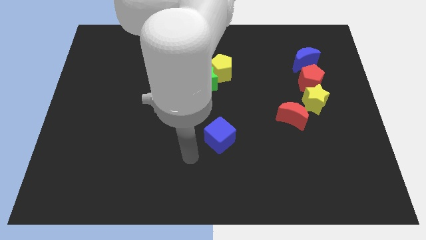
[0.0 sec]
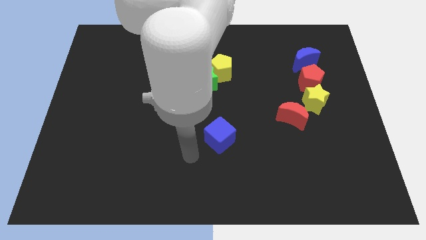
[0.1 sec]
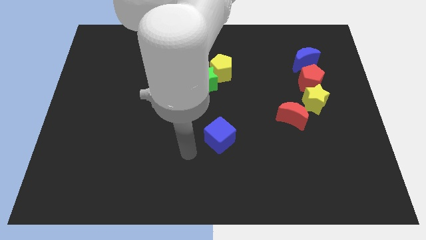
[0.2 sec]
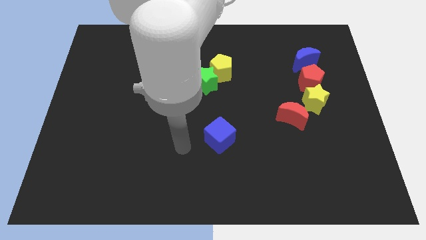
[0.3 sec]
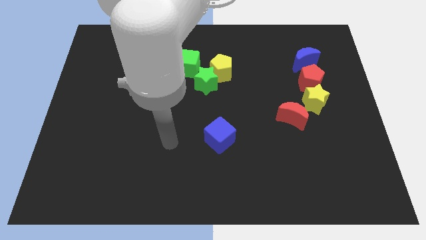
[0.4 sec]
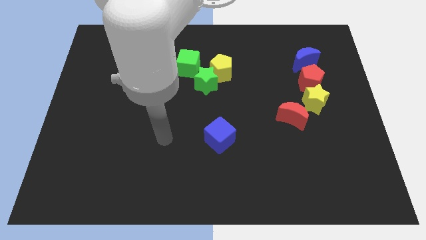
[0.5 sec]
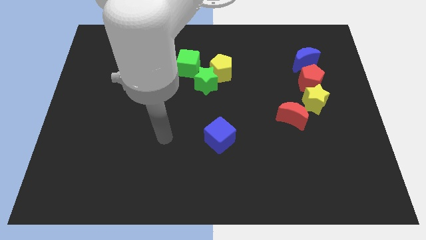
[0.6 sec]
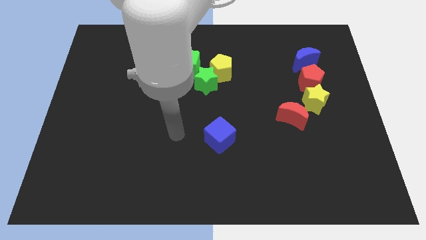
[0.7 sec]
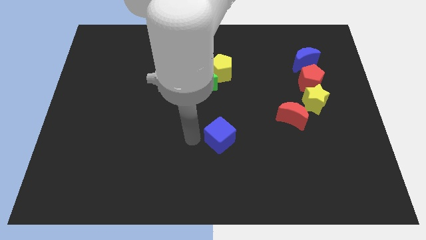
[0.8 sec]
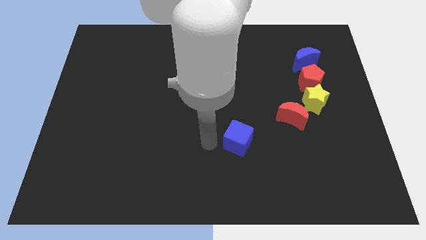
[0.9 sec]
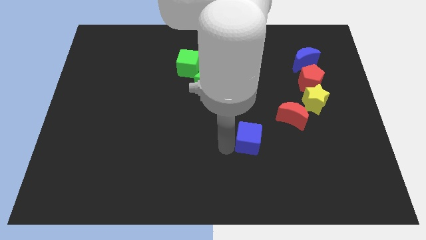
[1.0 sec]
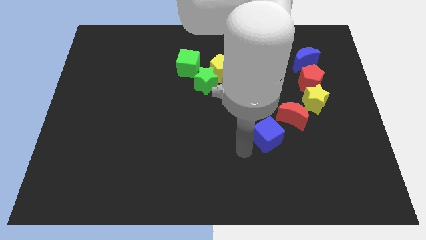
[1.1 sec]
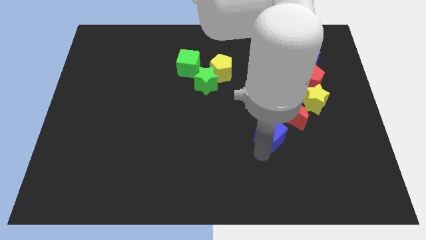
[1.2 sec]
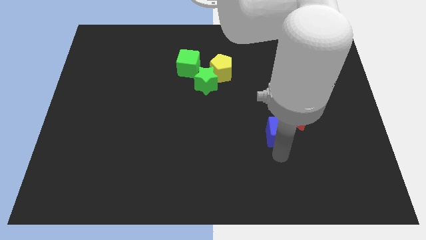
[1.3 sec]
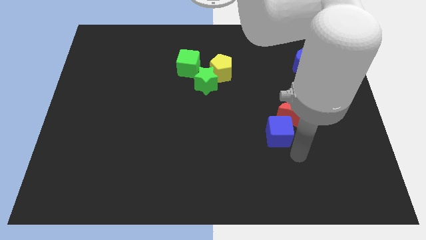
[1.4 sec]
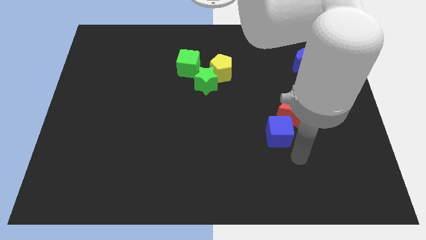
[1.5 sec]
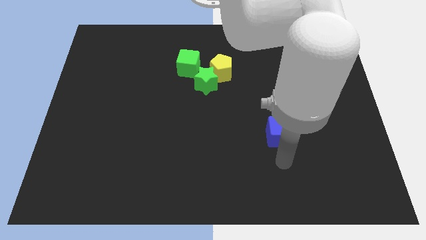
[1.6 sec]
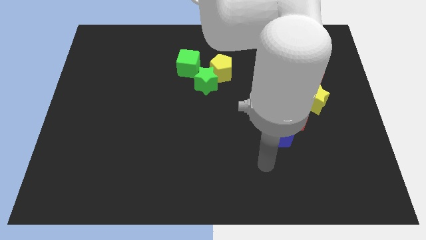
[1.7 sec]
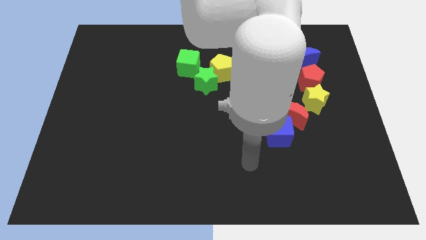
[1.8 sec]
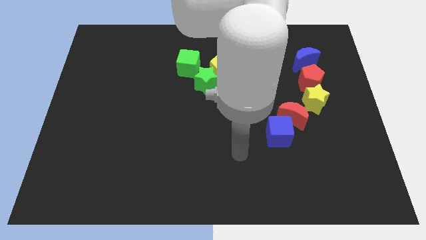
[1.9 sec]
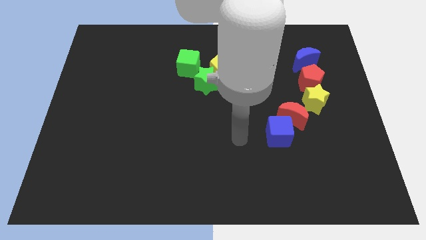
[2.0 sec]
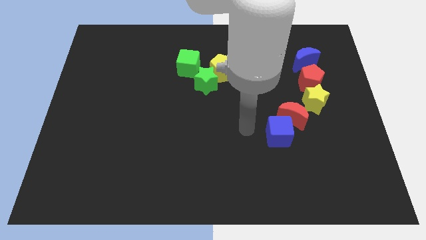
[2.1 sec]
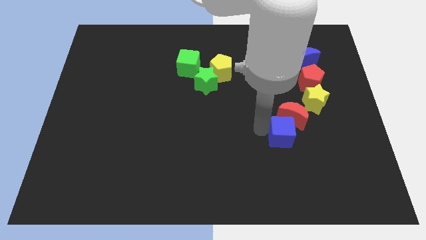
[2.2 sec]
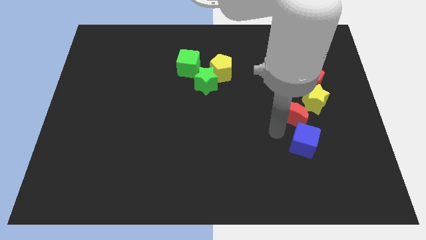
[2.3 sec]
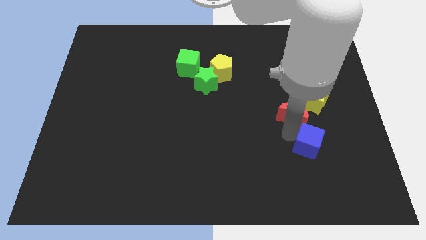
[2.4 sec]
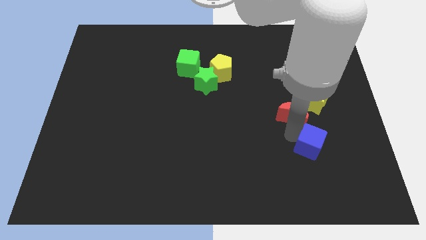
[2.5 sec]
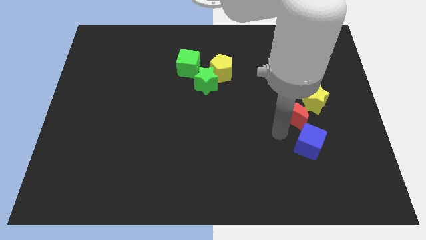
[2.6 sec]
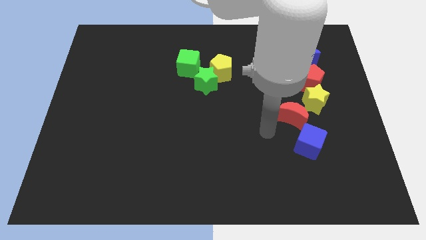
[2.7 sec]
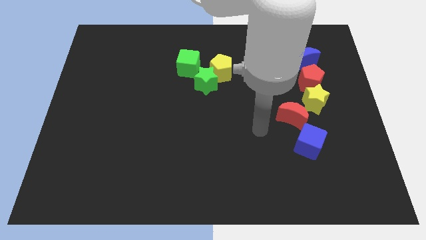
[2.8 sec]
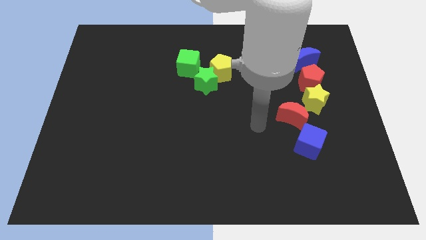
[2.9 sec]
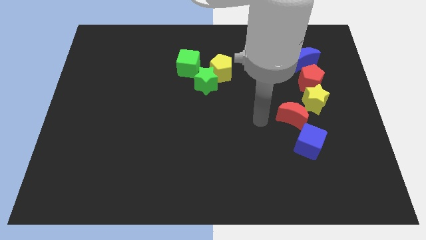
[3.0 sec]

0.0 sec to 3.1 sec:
move the blue cube to the right

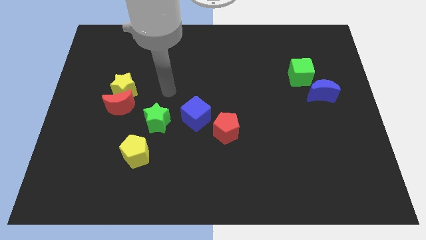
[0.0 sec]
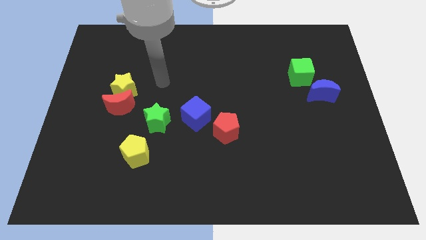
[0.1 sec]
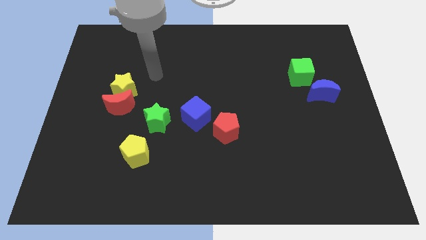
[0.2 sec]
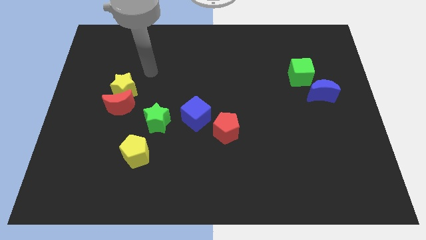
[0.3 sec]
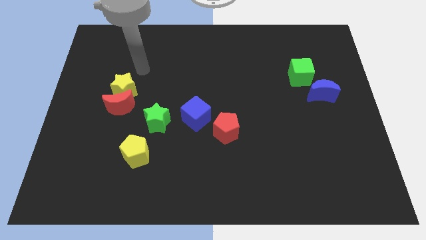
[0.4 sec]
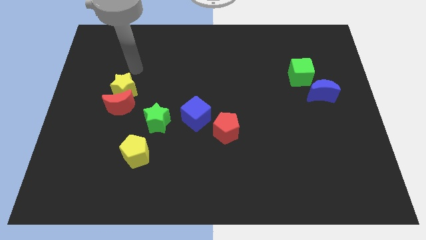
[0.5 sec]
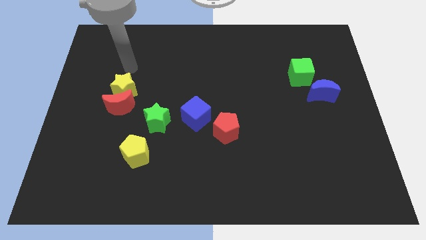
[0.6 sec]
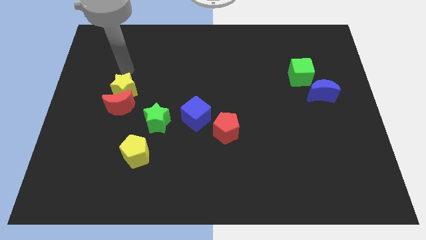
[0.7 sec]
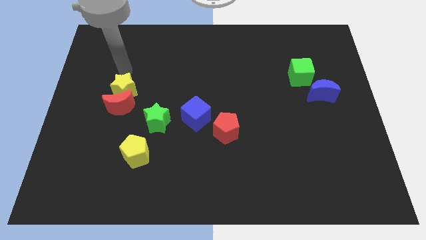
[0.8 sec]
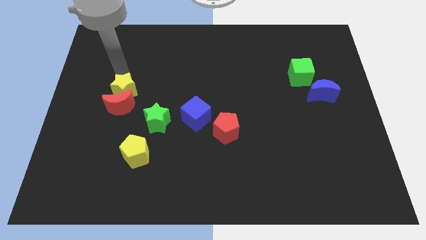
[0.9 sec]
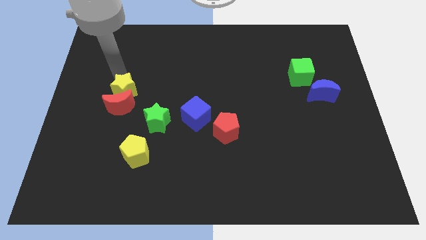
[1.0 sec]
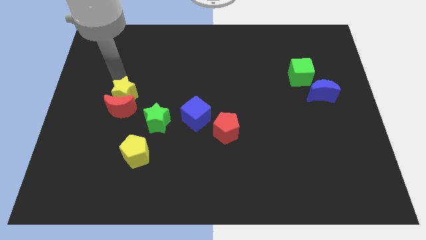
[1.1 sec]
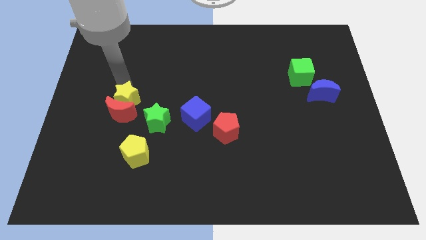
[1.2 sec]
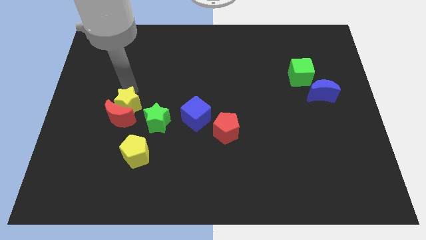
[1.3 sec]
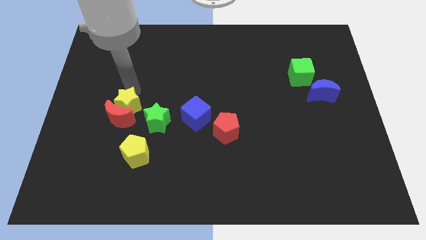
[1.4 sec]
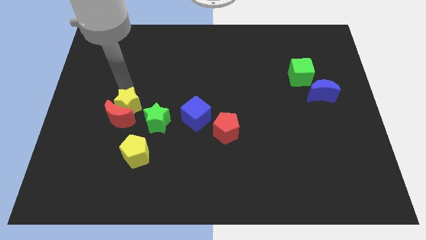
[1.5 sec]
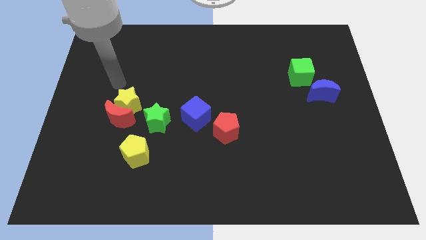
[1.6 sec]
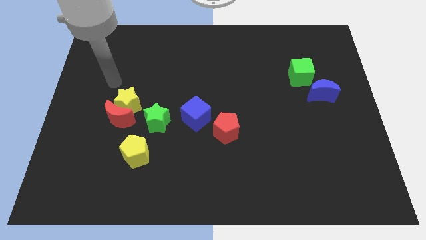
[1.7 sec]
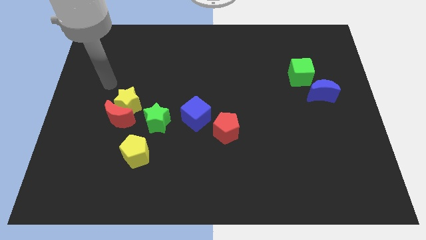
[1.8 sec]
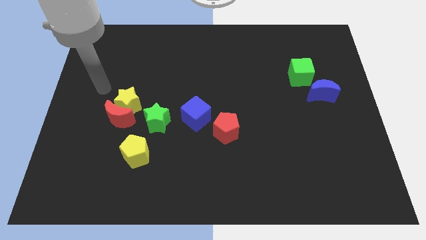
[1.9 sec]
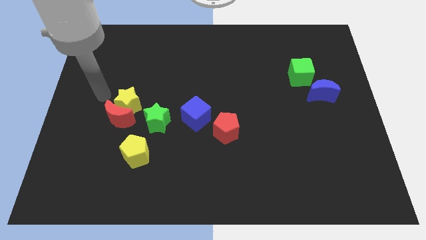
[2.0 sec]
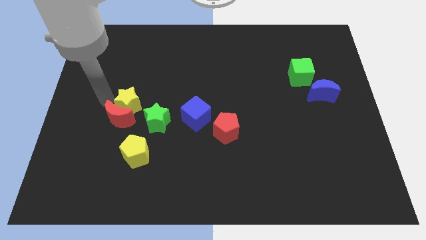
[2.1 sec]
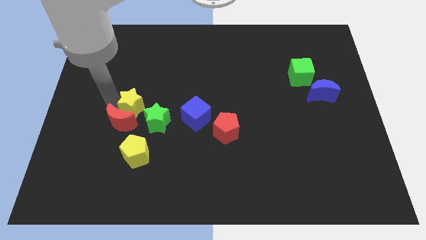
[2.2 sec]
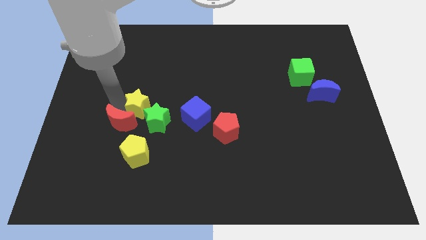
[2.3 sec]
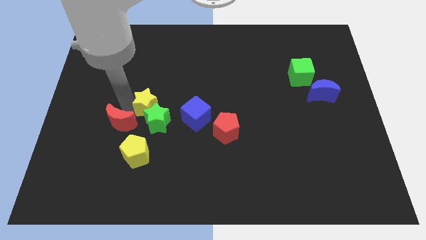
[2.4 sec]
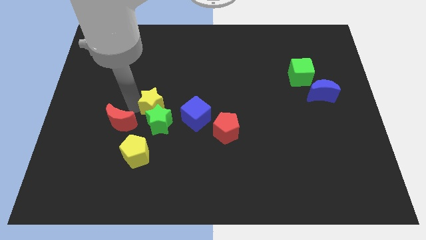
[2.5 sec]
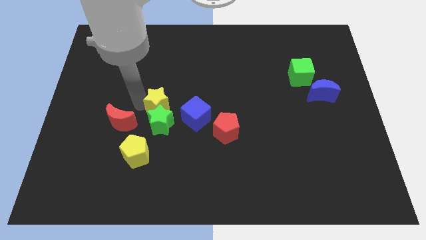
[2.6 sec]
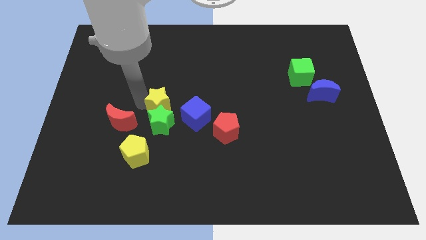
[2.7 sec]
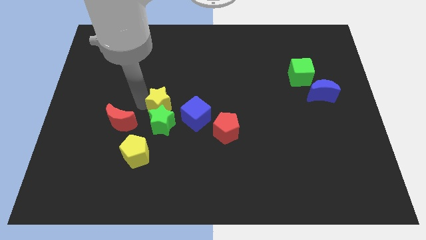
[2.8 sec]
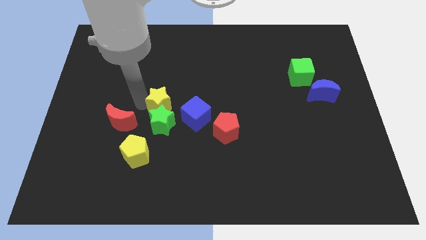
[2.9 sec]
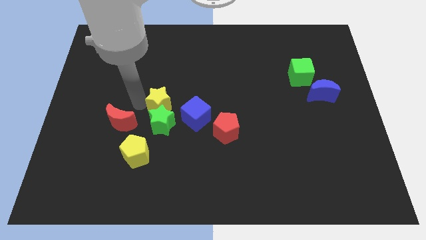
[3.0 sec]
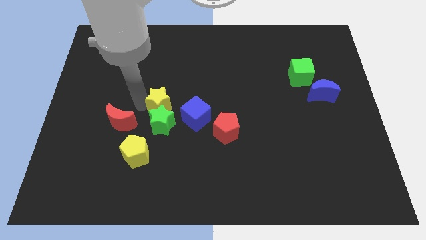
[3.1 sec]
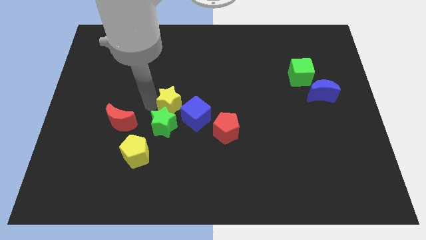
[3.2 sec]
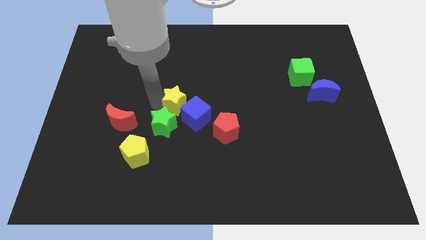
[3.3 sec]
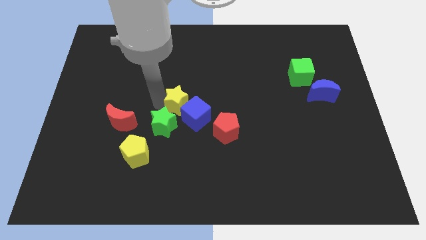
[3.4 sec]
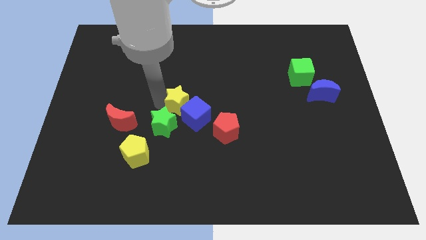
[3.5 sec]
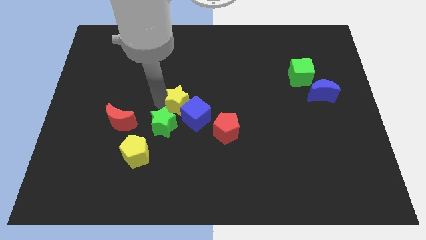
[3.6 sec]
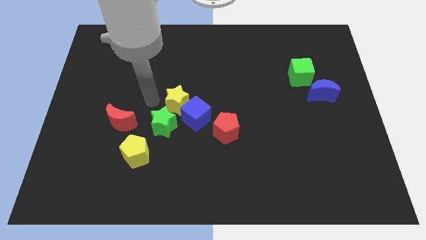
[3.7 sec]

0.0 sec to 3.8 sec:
push the yellow star to the top left of the blue cube

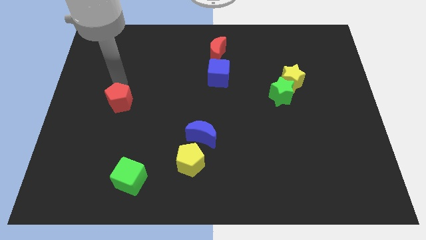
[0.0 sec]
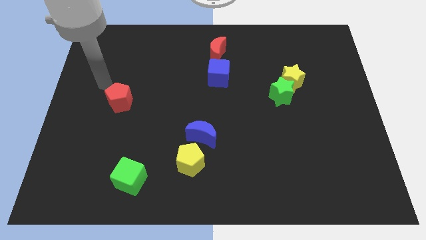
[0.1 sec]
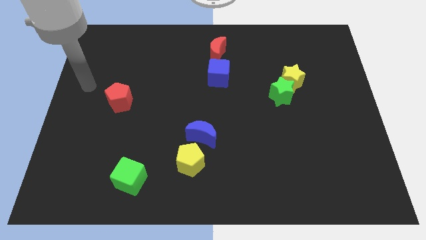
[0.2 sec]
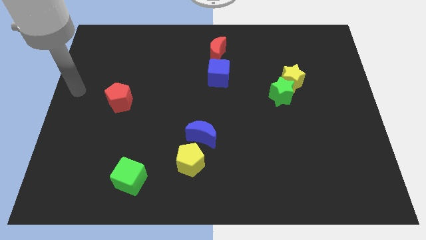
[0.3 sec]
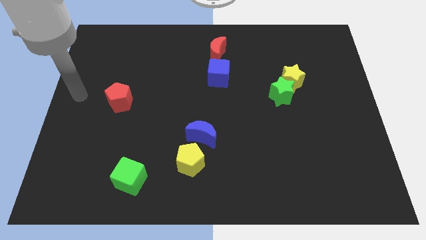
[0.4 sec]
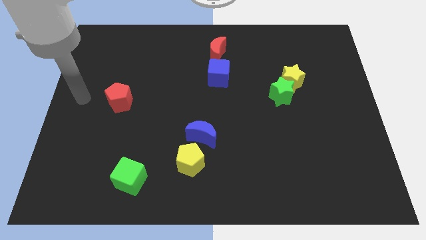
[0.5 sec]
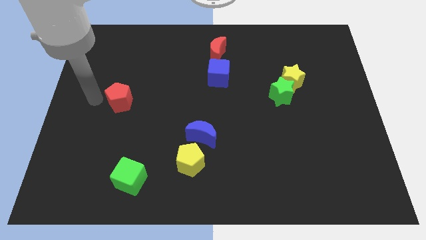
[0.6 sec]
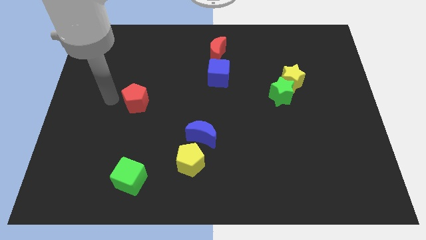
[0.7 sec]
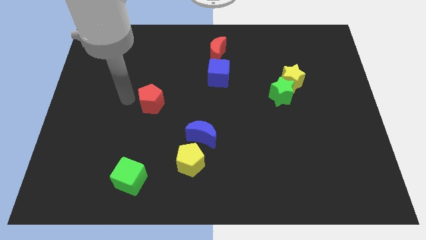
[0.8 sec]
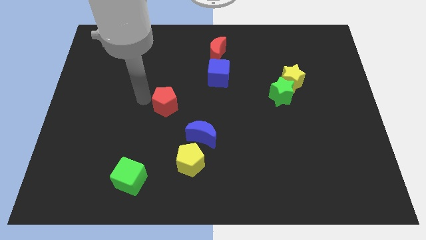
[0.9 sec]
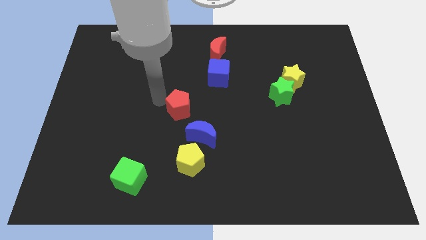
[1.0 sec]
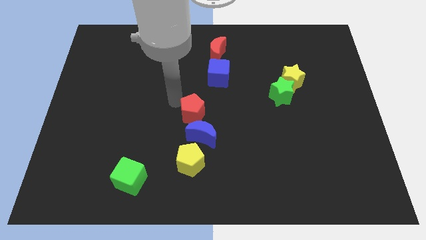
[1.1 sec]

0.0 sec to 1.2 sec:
place the red pentagon diagonally top left to blue moon

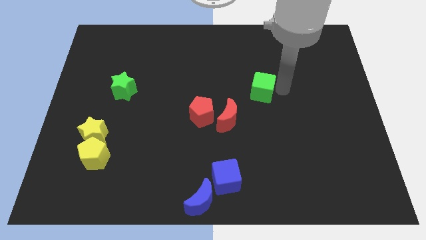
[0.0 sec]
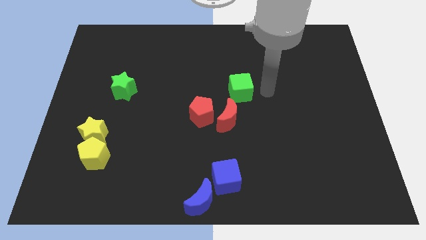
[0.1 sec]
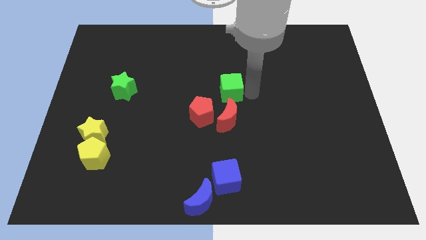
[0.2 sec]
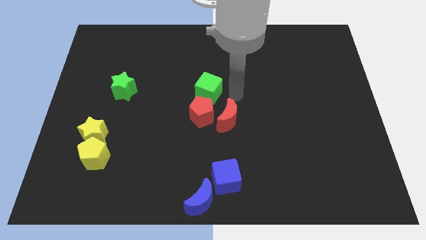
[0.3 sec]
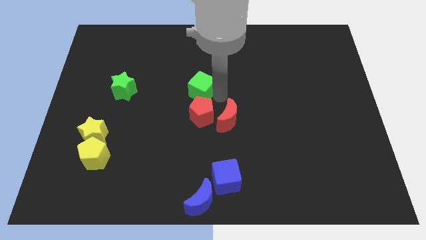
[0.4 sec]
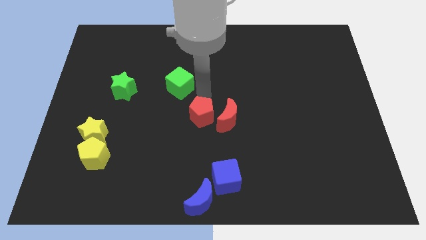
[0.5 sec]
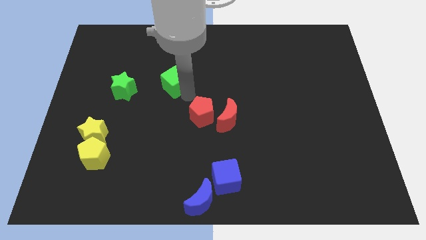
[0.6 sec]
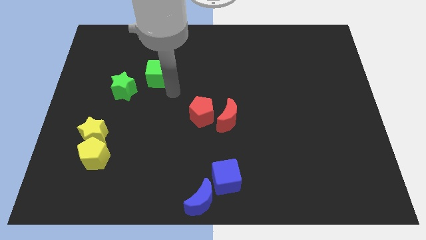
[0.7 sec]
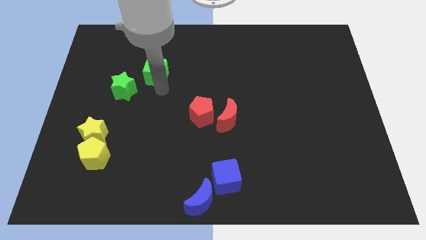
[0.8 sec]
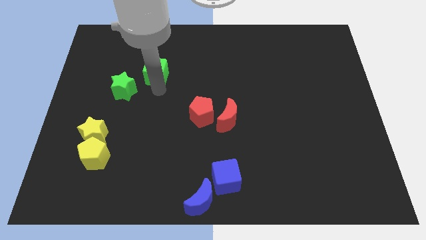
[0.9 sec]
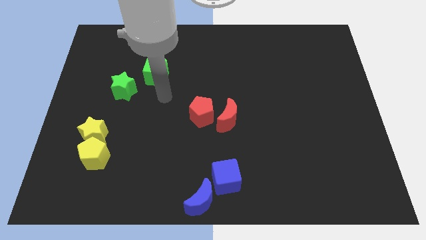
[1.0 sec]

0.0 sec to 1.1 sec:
push the green cube slightly to the left
